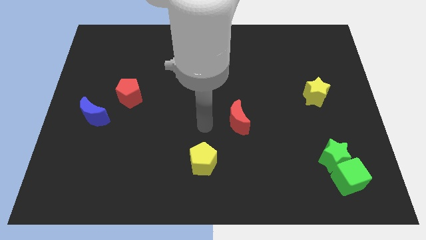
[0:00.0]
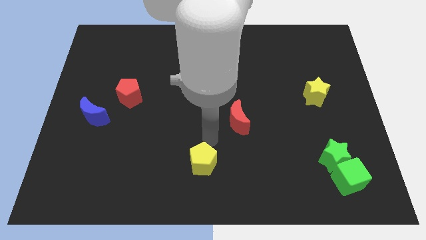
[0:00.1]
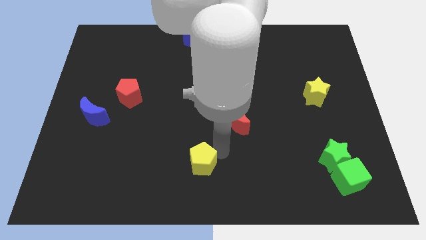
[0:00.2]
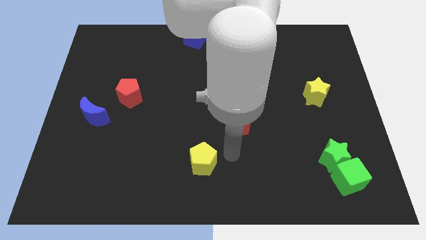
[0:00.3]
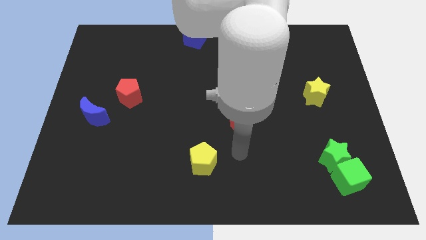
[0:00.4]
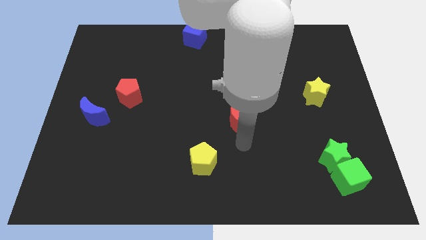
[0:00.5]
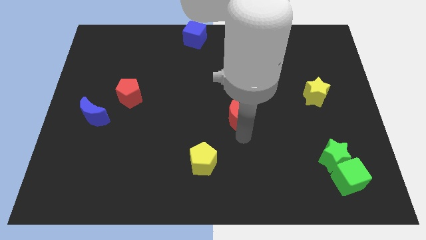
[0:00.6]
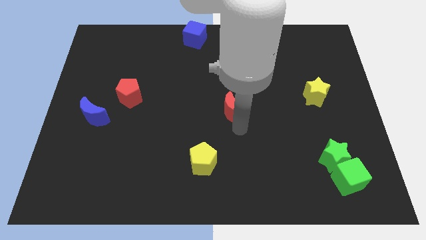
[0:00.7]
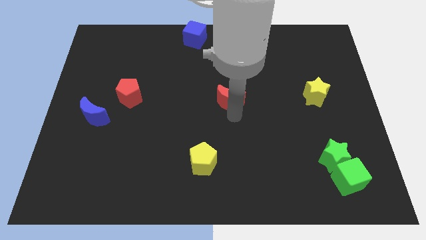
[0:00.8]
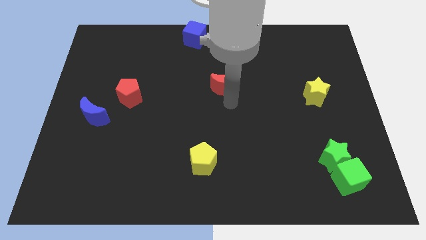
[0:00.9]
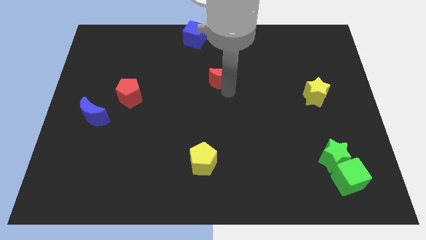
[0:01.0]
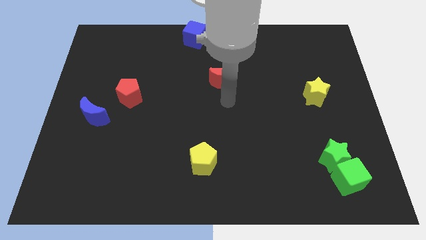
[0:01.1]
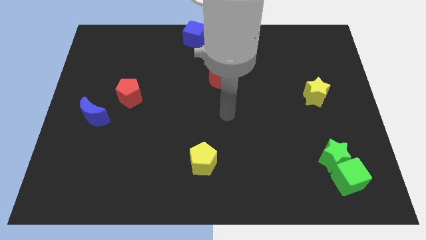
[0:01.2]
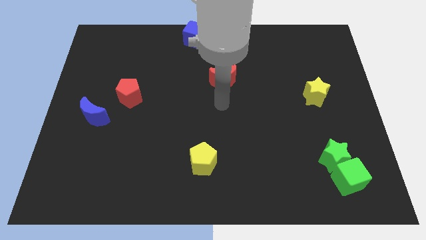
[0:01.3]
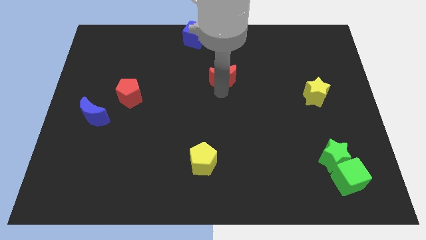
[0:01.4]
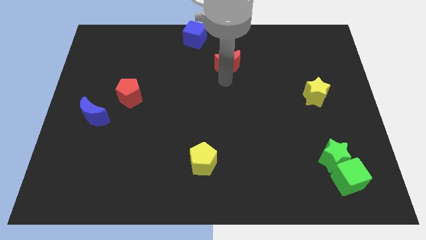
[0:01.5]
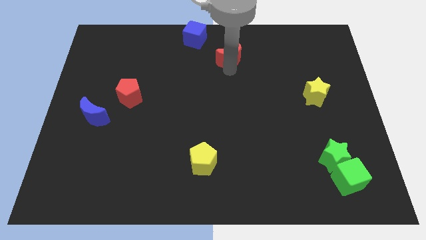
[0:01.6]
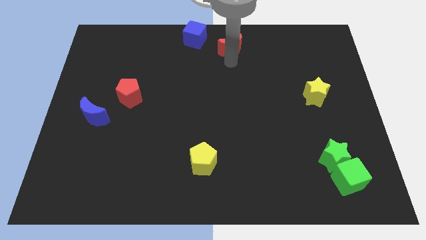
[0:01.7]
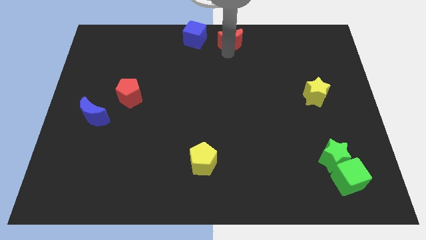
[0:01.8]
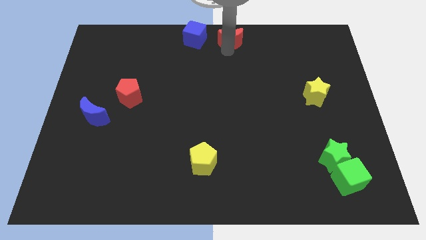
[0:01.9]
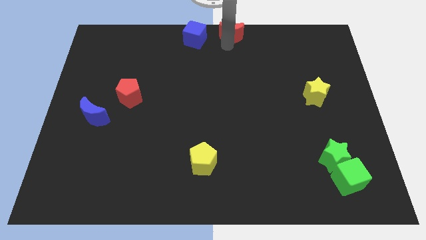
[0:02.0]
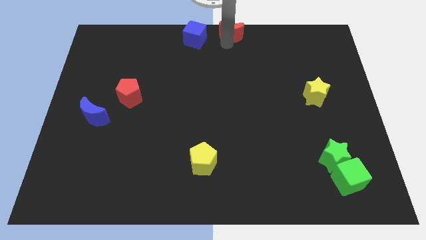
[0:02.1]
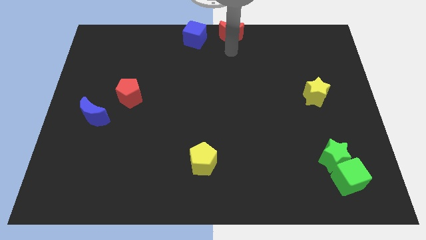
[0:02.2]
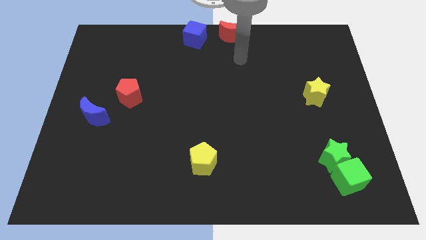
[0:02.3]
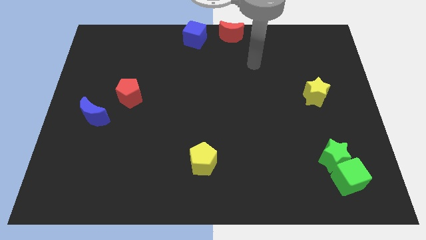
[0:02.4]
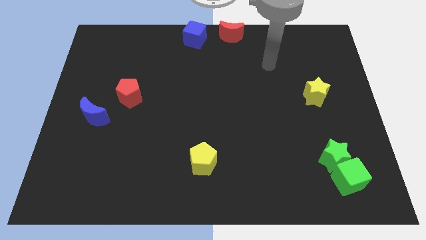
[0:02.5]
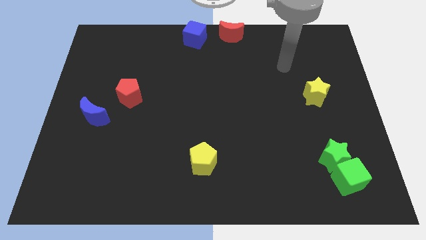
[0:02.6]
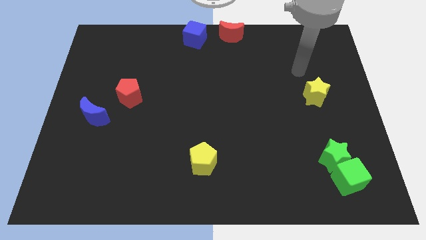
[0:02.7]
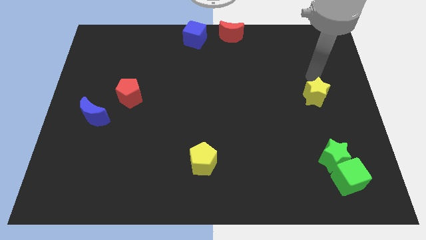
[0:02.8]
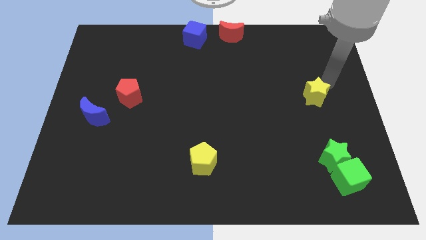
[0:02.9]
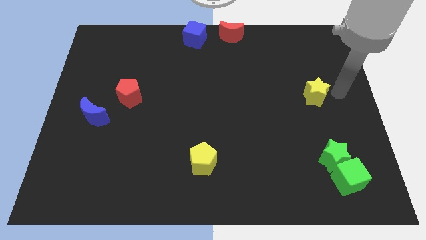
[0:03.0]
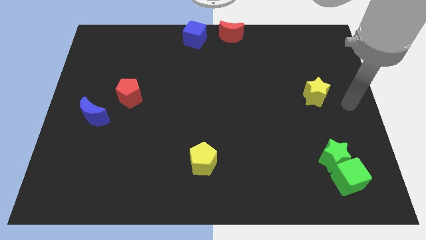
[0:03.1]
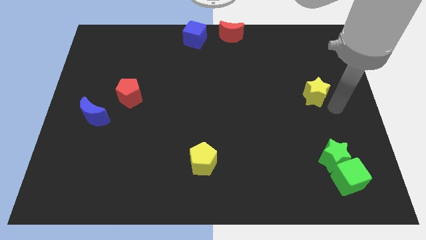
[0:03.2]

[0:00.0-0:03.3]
place the red crescent to the right side of the blue cube

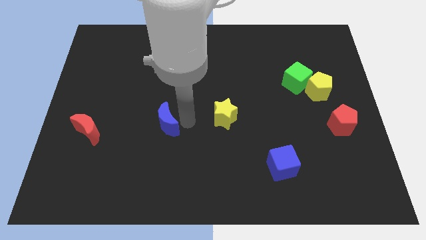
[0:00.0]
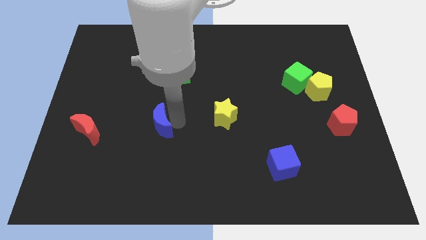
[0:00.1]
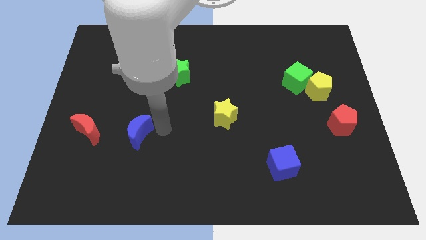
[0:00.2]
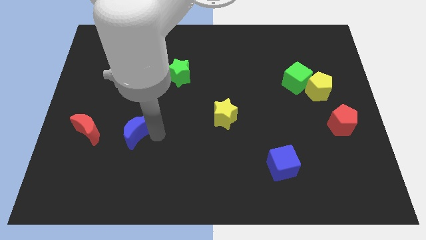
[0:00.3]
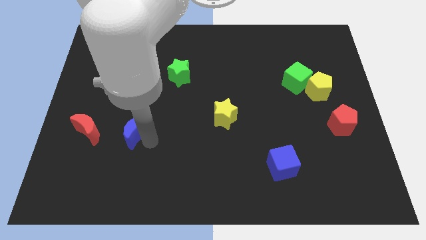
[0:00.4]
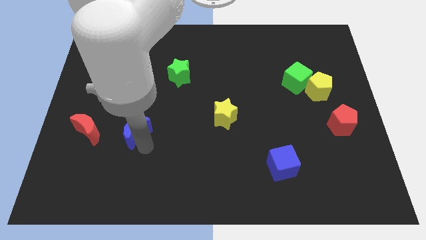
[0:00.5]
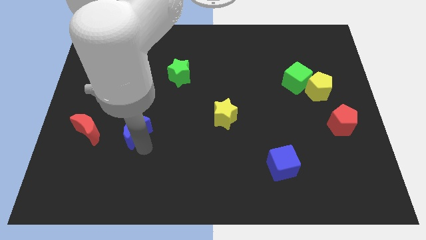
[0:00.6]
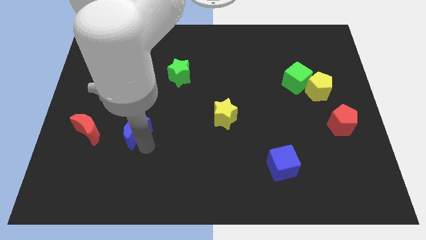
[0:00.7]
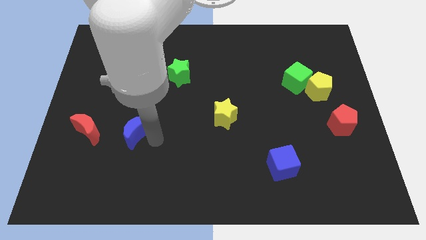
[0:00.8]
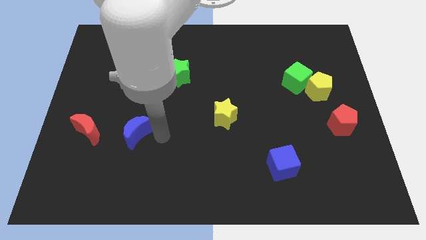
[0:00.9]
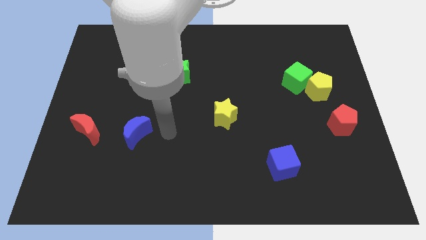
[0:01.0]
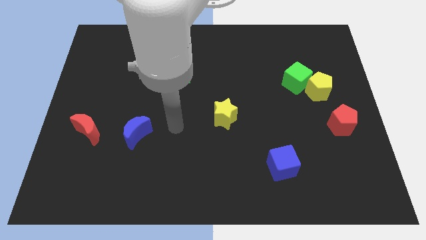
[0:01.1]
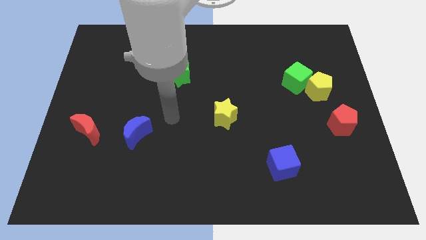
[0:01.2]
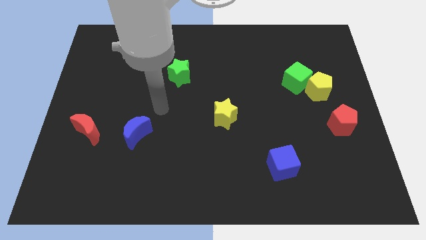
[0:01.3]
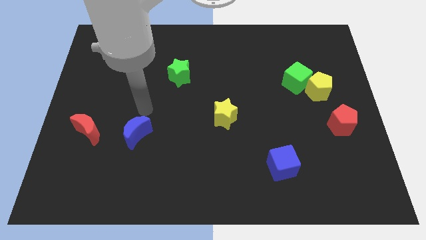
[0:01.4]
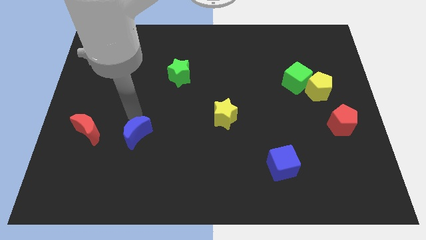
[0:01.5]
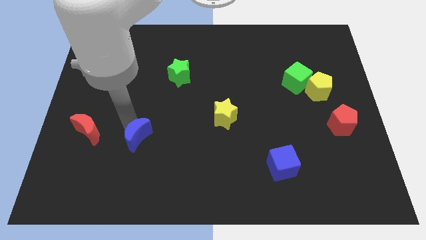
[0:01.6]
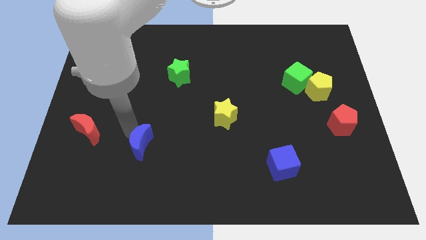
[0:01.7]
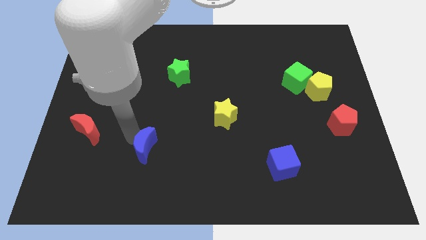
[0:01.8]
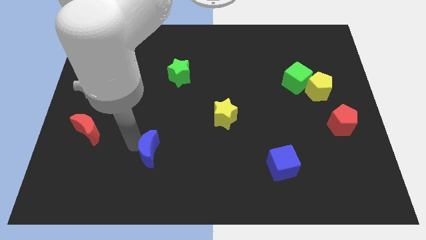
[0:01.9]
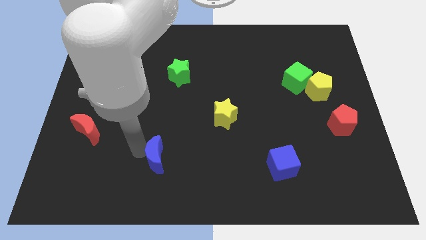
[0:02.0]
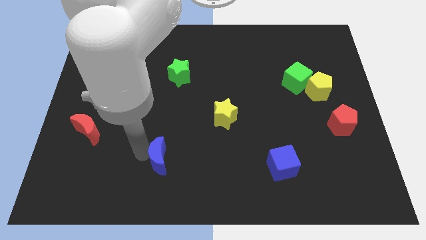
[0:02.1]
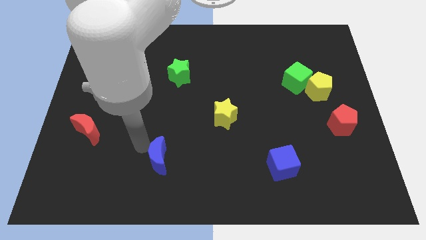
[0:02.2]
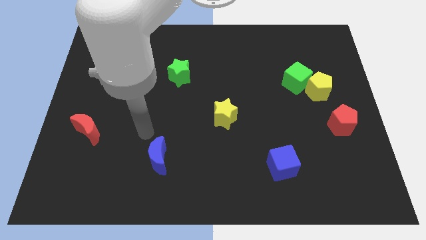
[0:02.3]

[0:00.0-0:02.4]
move the blue moon to the bottom of the green star

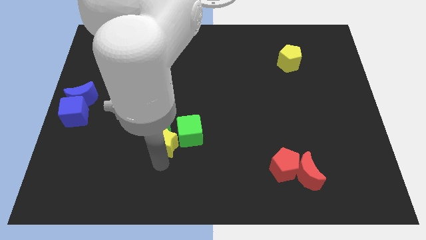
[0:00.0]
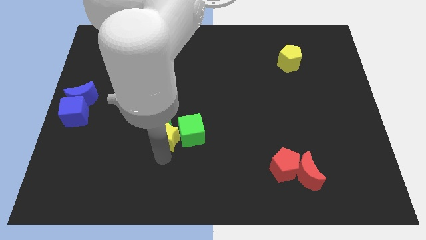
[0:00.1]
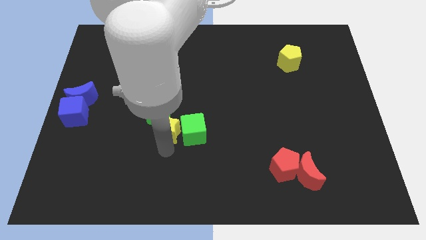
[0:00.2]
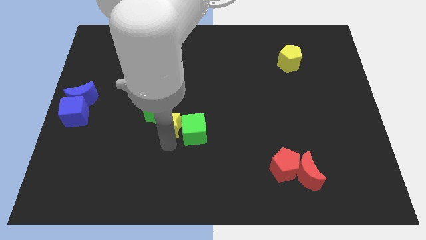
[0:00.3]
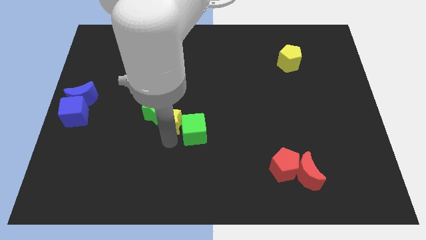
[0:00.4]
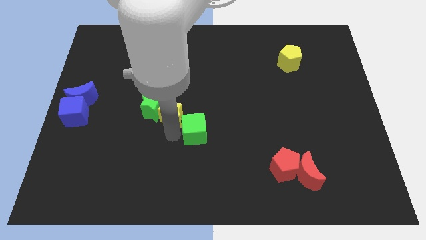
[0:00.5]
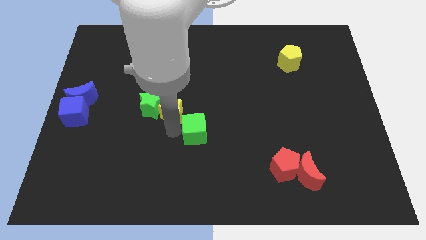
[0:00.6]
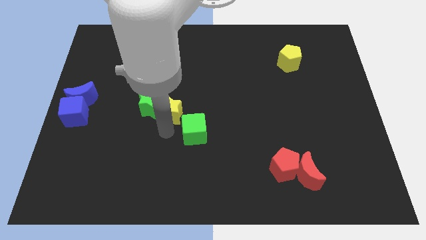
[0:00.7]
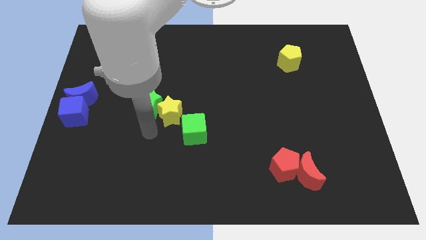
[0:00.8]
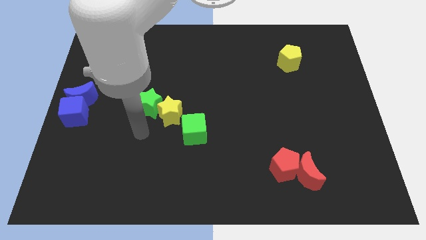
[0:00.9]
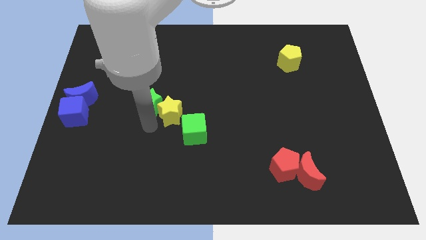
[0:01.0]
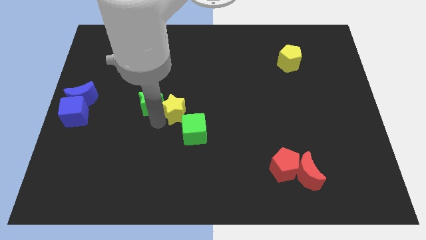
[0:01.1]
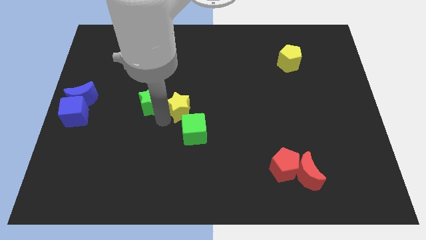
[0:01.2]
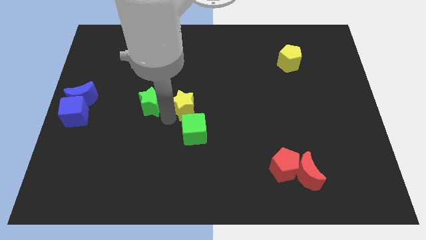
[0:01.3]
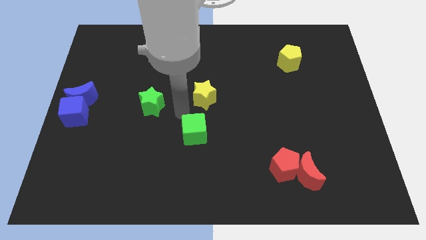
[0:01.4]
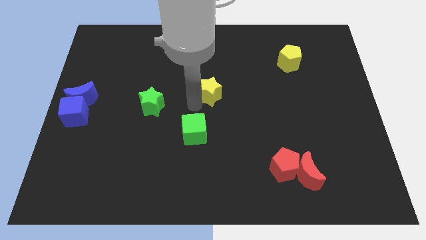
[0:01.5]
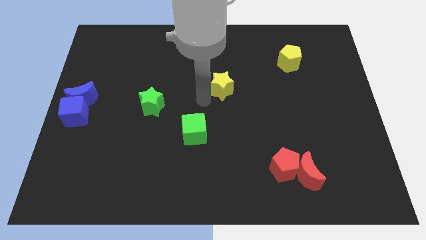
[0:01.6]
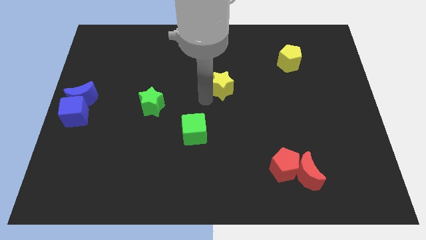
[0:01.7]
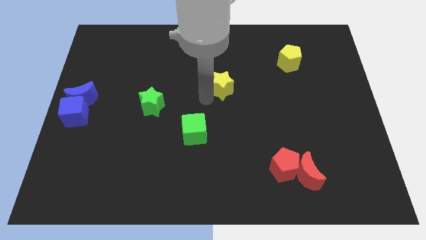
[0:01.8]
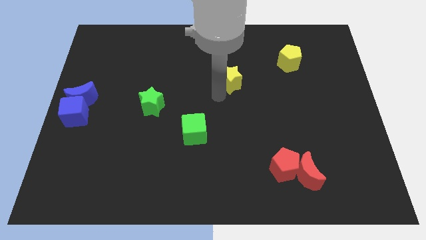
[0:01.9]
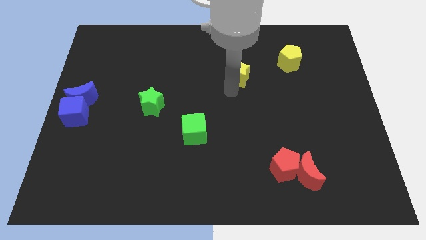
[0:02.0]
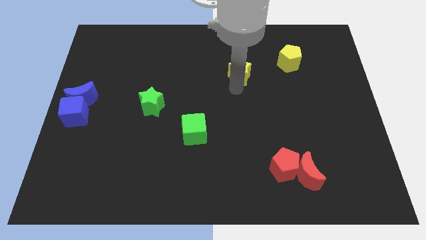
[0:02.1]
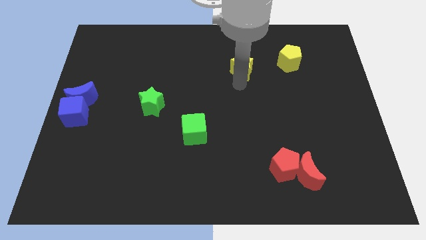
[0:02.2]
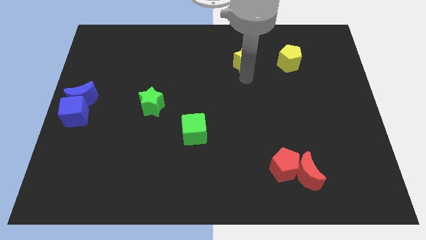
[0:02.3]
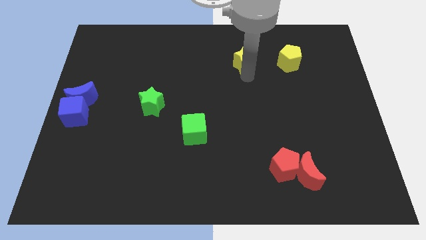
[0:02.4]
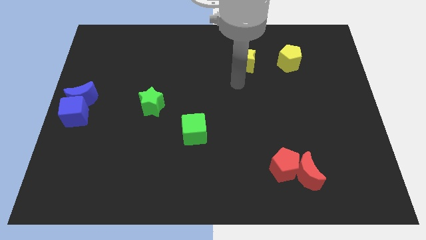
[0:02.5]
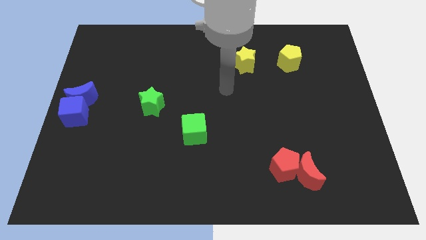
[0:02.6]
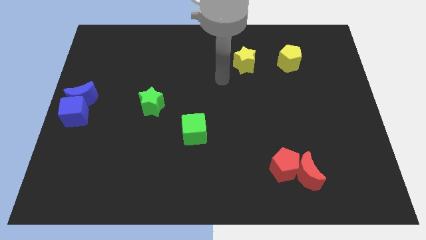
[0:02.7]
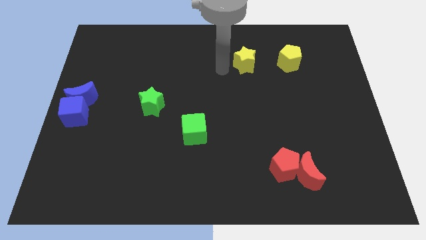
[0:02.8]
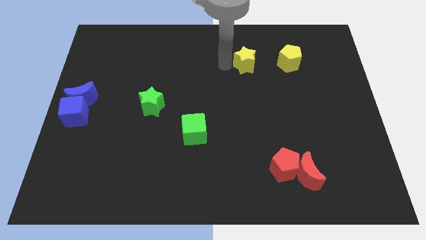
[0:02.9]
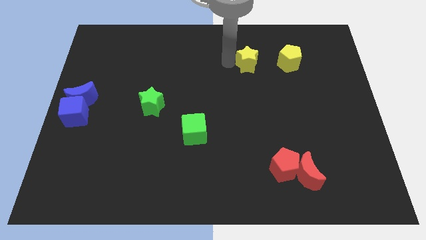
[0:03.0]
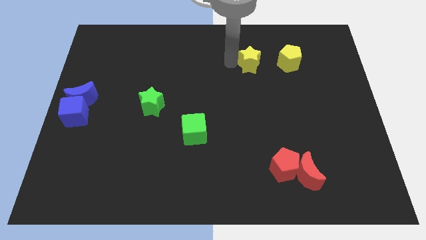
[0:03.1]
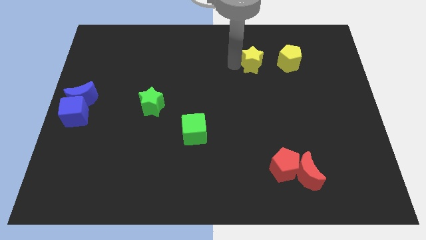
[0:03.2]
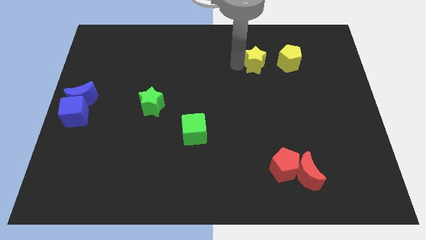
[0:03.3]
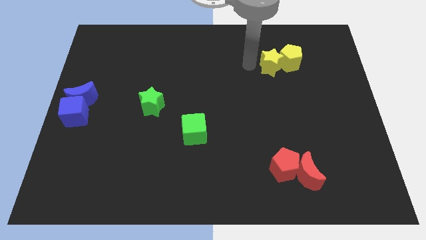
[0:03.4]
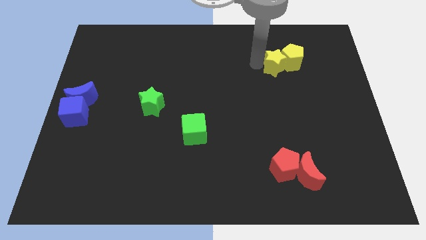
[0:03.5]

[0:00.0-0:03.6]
move the yellow star into the yellow pentagon to the left
